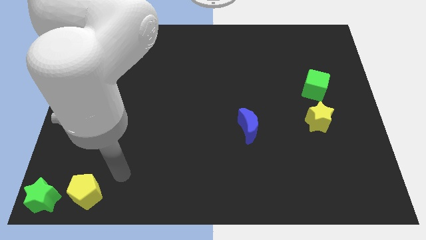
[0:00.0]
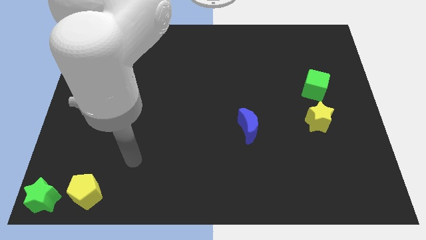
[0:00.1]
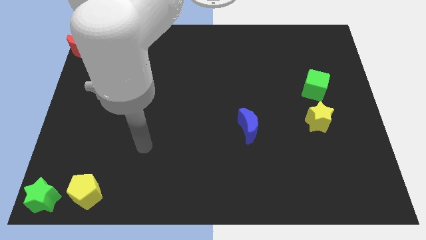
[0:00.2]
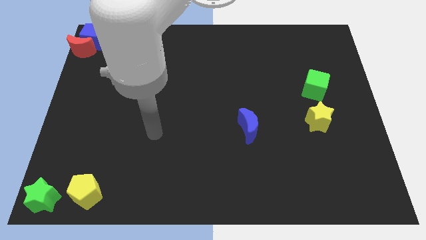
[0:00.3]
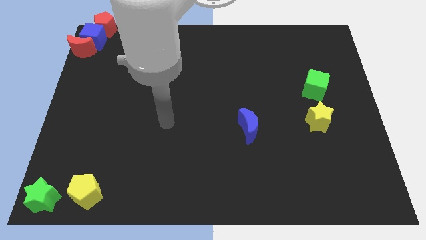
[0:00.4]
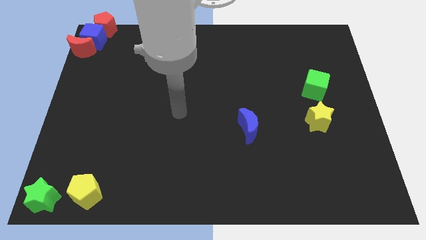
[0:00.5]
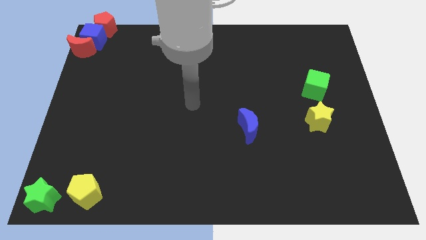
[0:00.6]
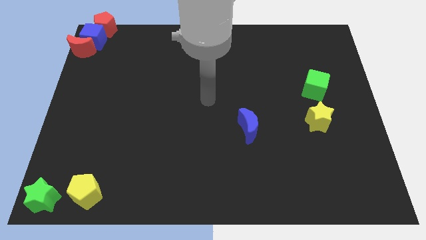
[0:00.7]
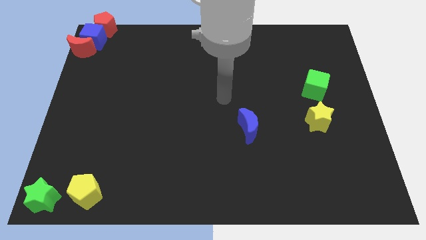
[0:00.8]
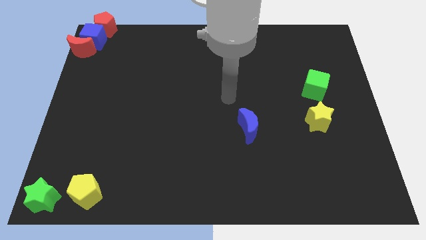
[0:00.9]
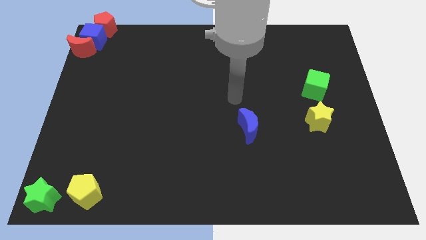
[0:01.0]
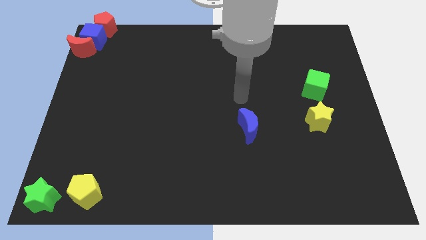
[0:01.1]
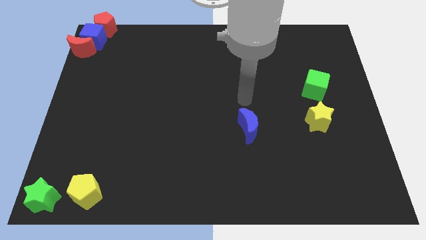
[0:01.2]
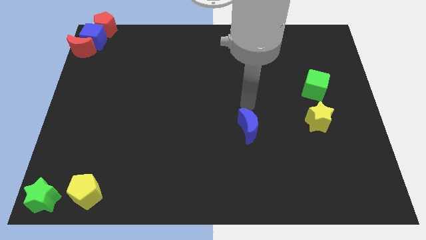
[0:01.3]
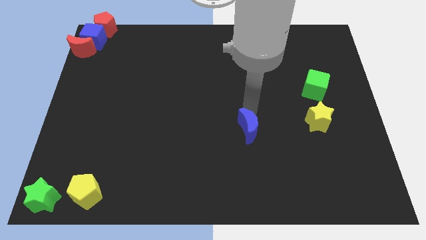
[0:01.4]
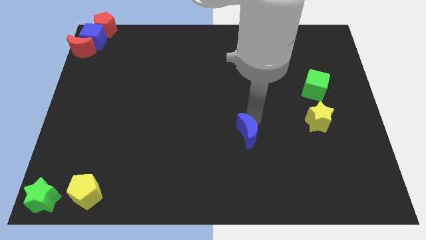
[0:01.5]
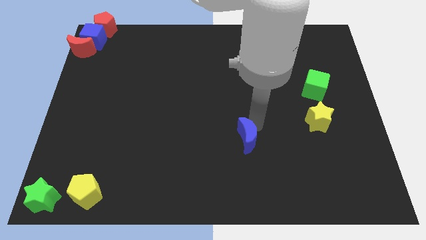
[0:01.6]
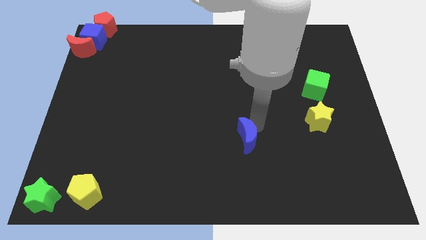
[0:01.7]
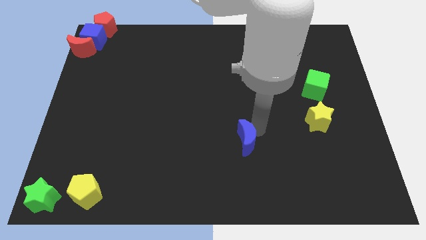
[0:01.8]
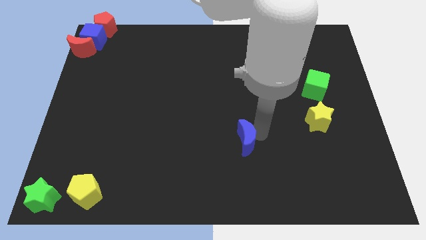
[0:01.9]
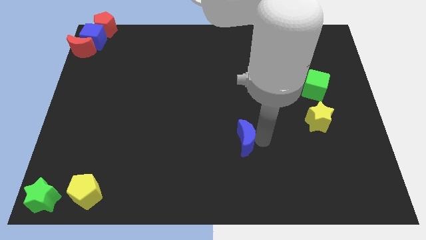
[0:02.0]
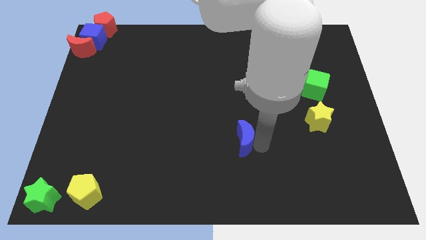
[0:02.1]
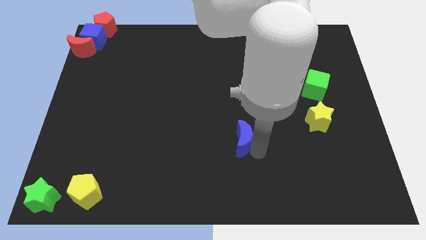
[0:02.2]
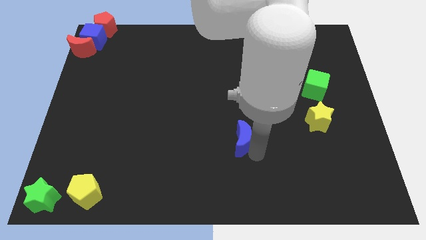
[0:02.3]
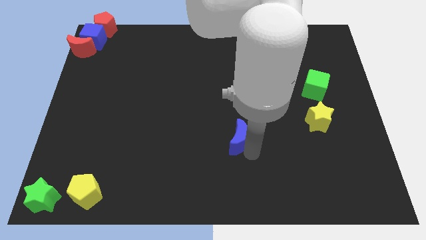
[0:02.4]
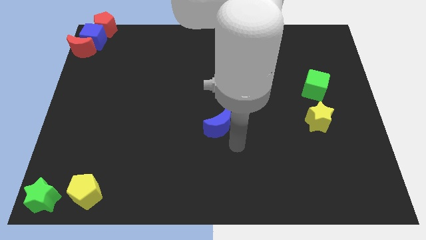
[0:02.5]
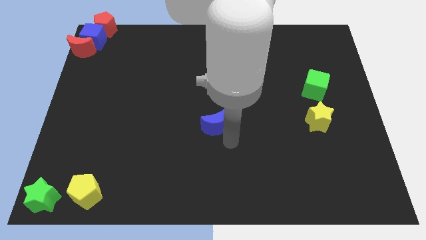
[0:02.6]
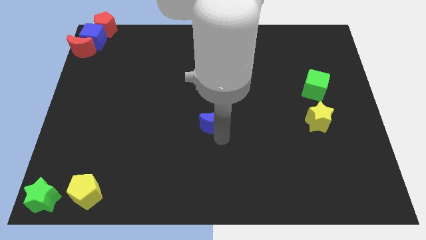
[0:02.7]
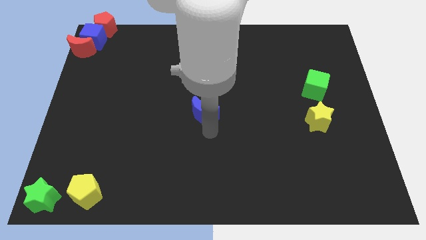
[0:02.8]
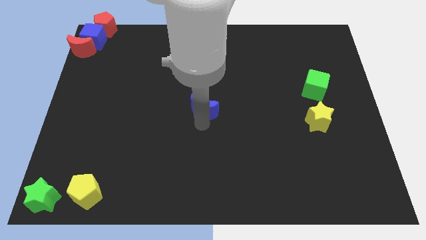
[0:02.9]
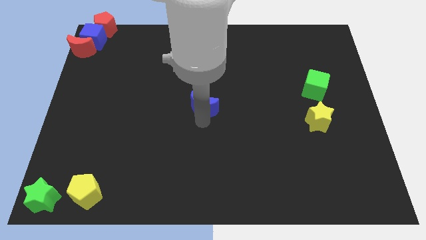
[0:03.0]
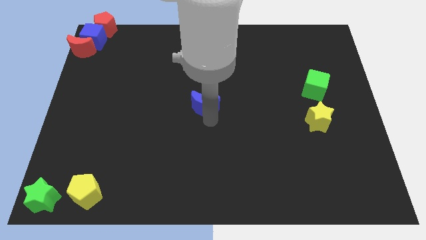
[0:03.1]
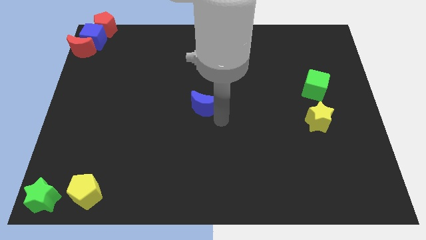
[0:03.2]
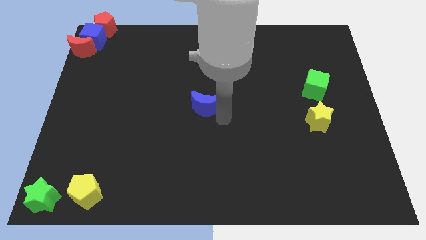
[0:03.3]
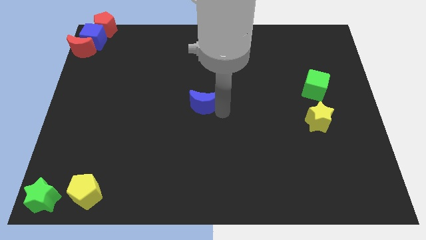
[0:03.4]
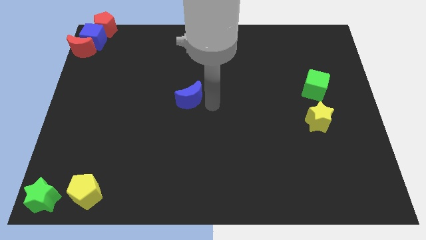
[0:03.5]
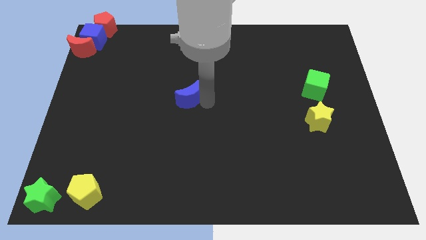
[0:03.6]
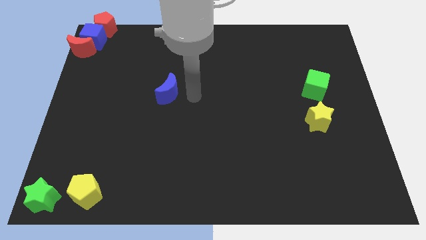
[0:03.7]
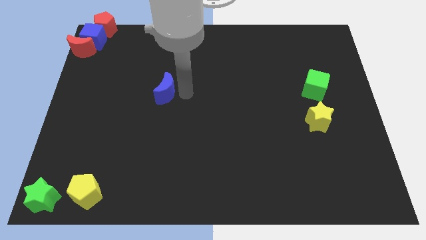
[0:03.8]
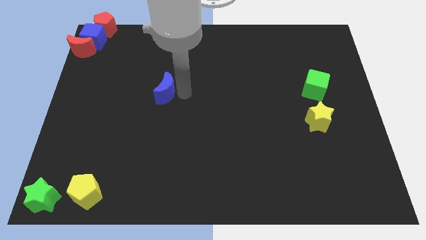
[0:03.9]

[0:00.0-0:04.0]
slide the blue crescent to the left side of the table

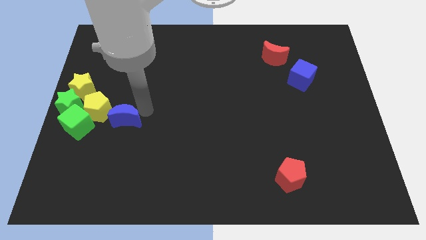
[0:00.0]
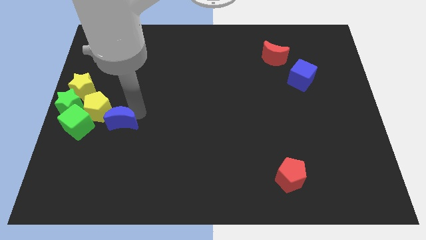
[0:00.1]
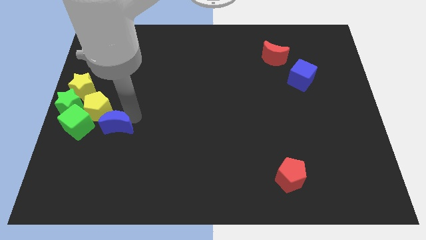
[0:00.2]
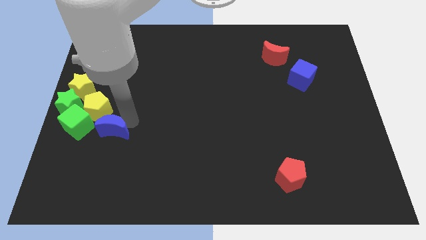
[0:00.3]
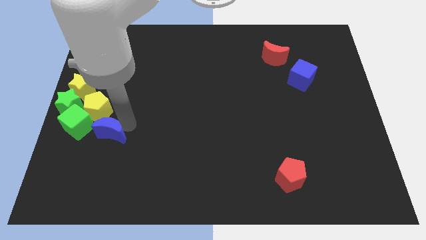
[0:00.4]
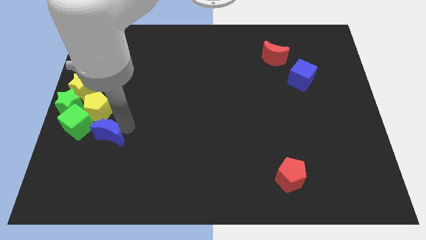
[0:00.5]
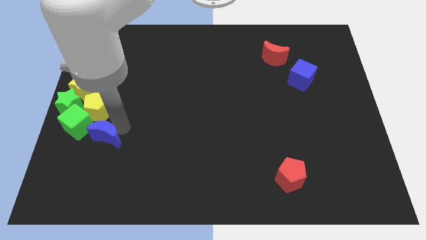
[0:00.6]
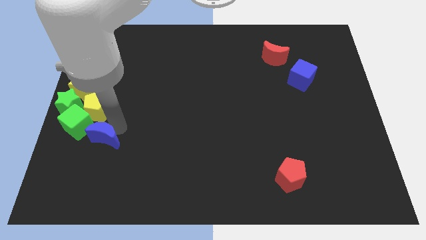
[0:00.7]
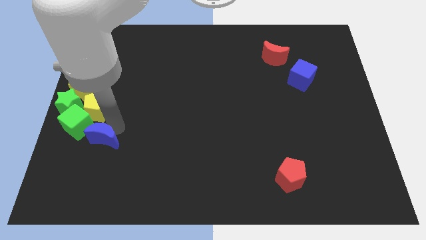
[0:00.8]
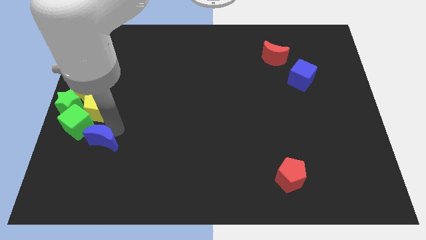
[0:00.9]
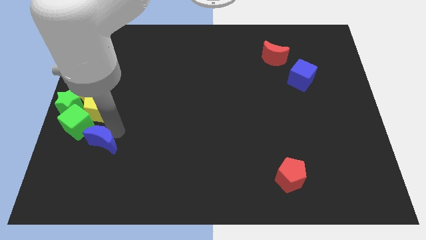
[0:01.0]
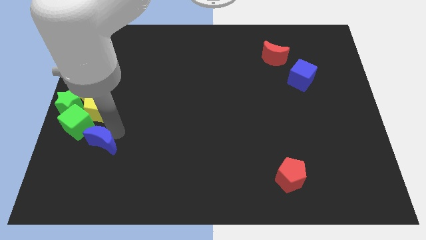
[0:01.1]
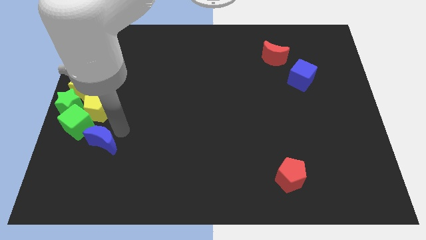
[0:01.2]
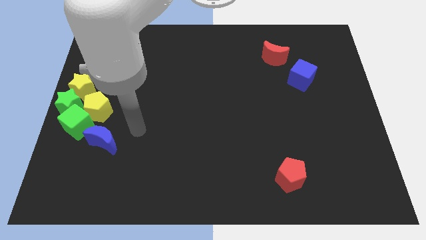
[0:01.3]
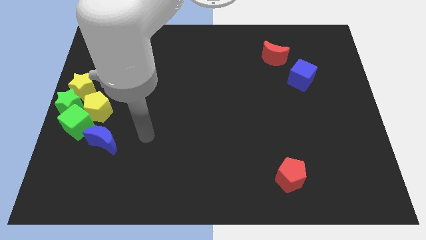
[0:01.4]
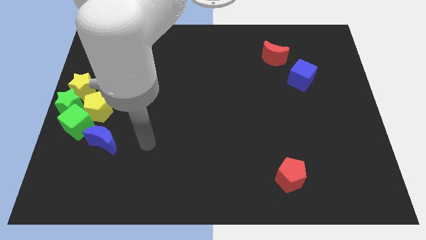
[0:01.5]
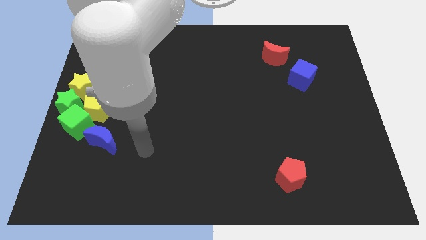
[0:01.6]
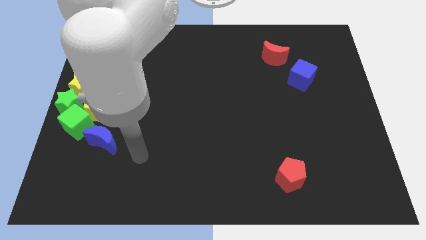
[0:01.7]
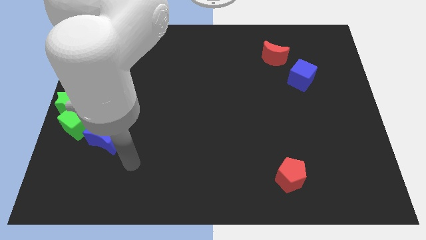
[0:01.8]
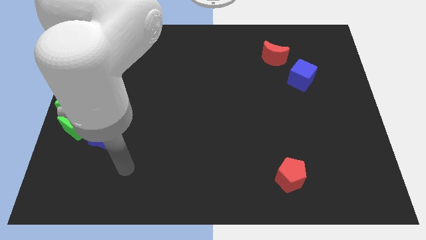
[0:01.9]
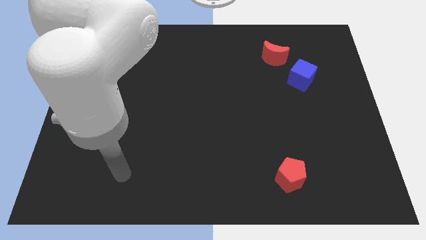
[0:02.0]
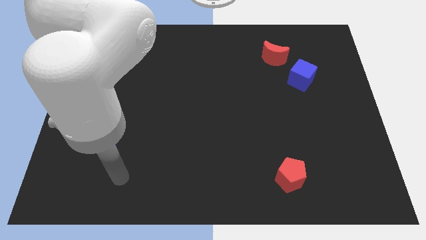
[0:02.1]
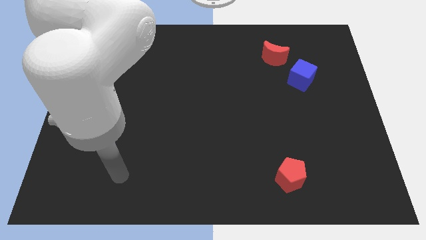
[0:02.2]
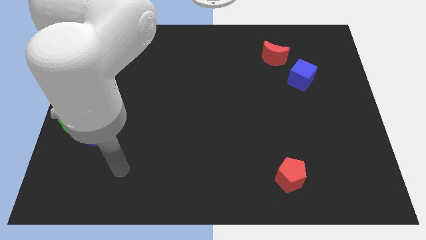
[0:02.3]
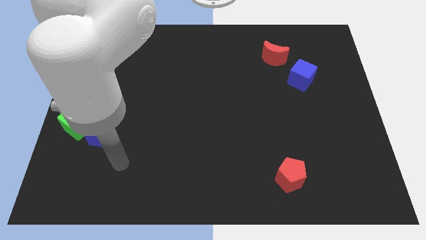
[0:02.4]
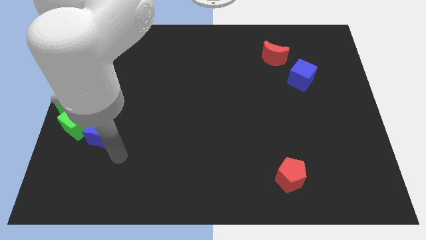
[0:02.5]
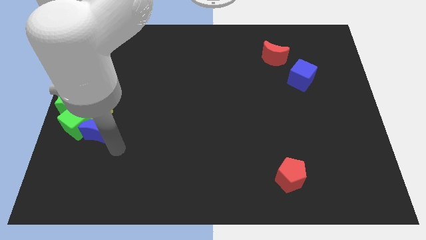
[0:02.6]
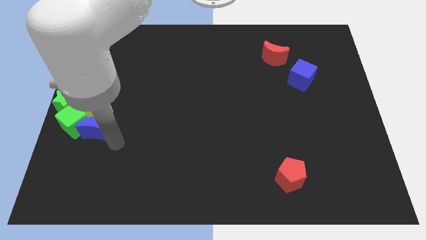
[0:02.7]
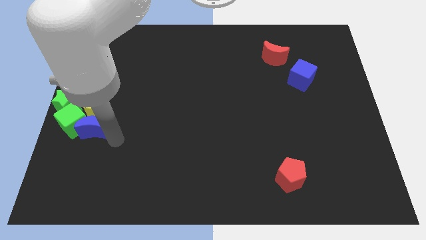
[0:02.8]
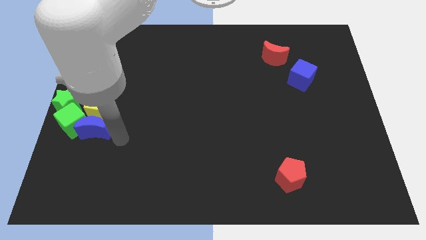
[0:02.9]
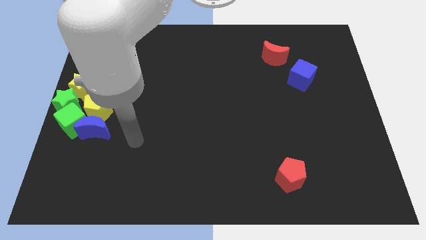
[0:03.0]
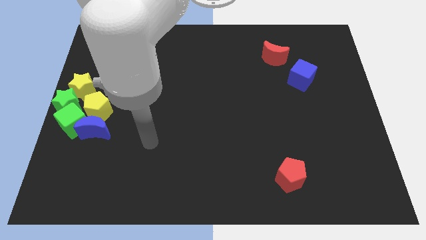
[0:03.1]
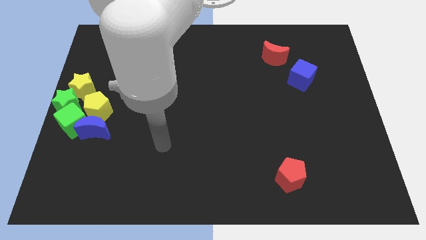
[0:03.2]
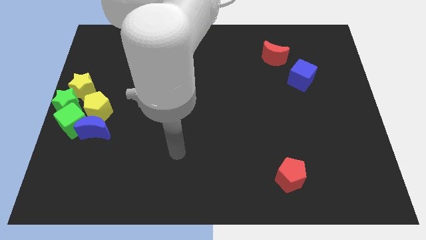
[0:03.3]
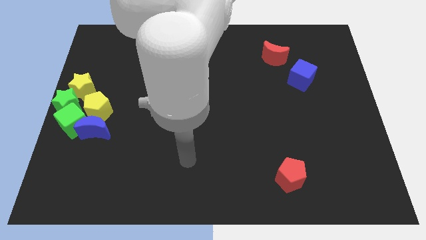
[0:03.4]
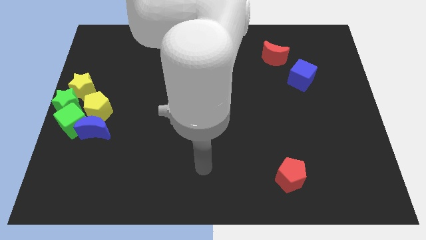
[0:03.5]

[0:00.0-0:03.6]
push the blue moon into the green cube

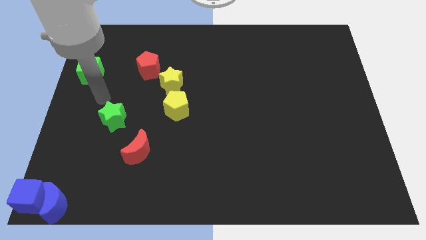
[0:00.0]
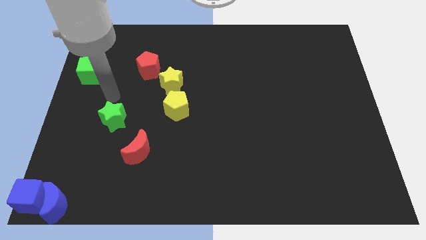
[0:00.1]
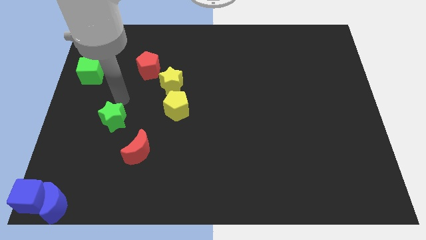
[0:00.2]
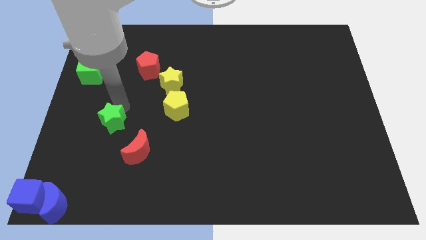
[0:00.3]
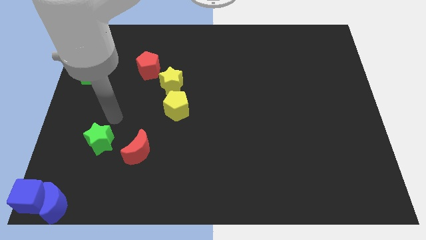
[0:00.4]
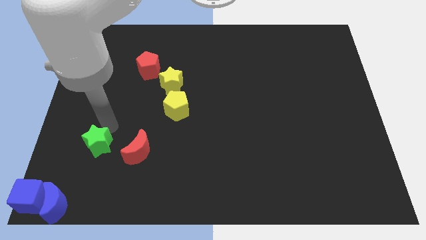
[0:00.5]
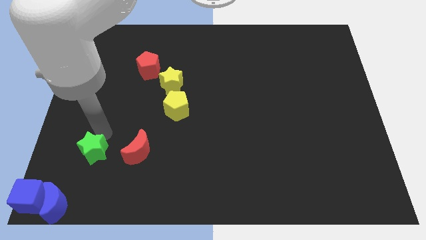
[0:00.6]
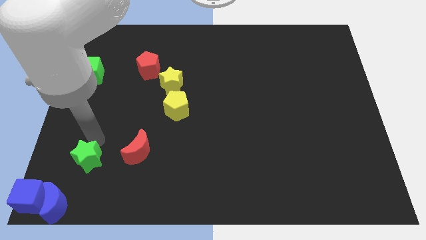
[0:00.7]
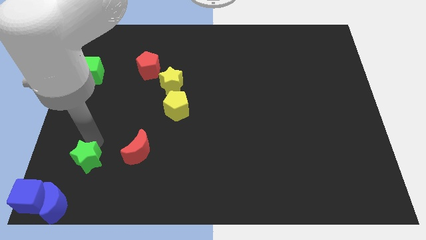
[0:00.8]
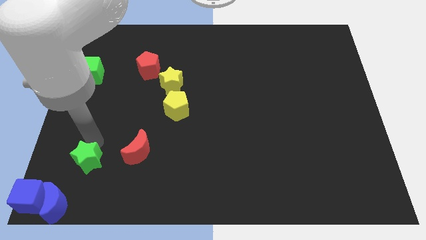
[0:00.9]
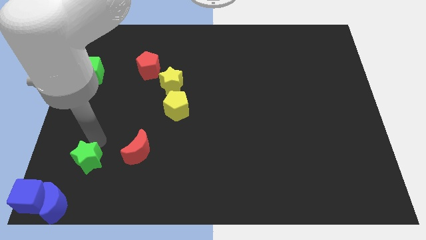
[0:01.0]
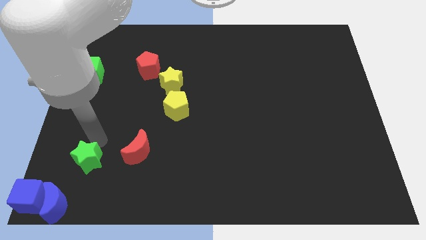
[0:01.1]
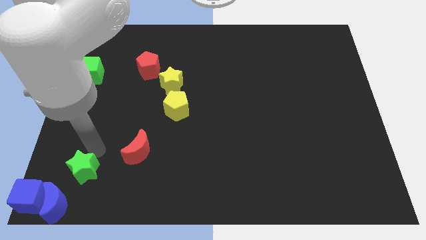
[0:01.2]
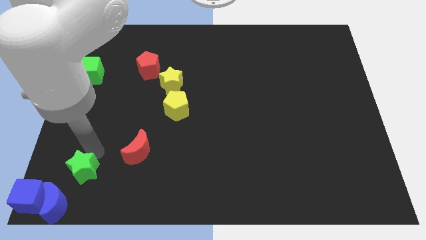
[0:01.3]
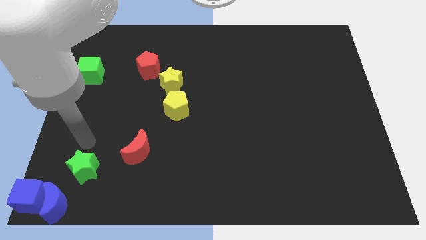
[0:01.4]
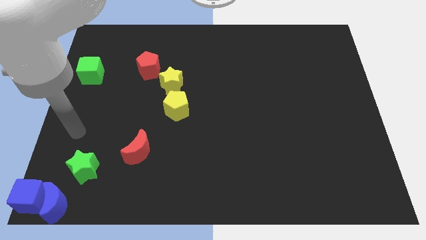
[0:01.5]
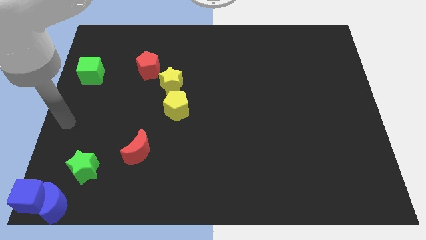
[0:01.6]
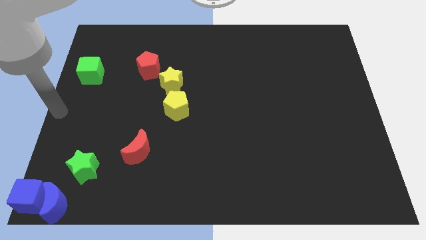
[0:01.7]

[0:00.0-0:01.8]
put the green star diagonally on the top right side of the blue crescent
